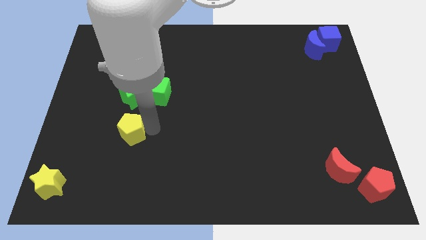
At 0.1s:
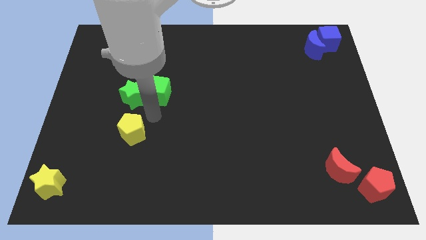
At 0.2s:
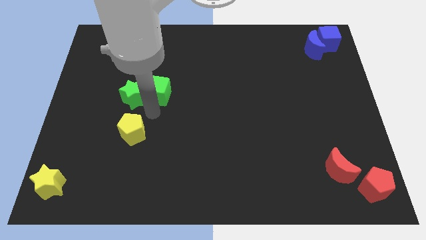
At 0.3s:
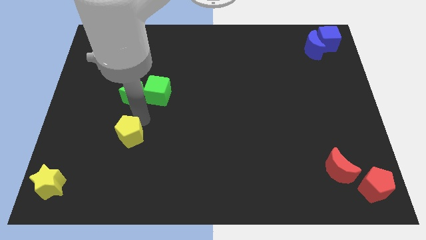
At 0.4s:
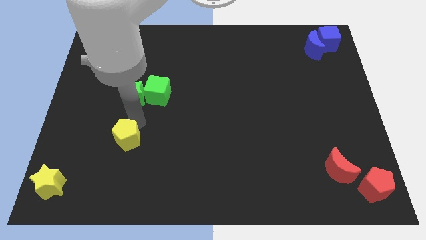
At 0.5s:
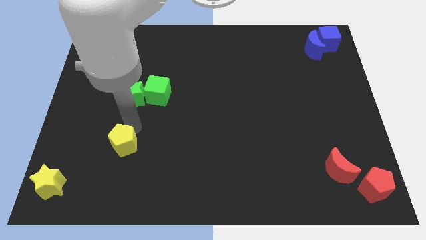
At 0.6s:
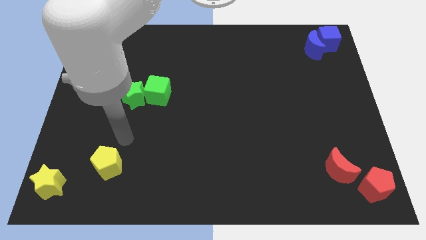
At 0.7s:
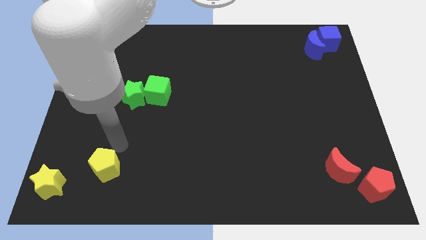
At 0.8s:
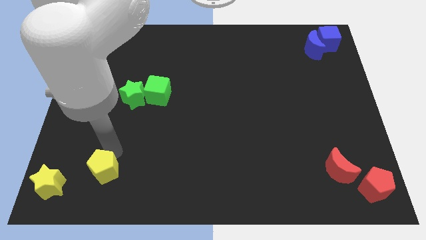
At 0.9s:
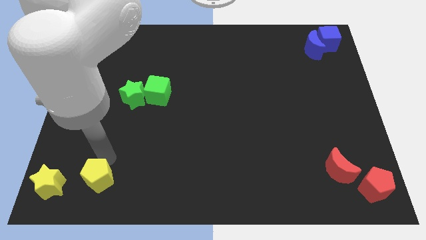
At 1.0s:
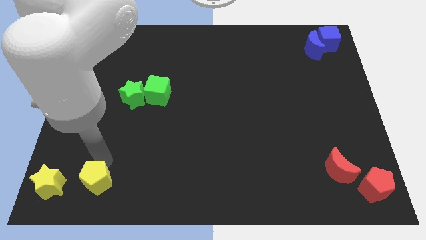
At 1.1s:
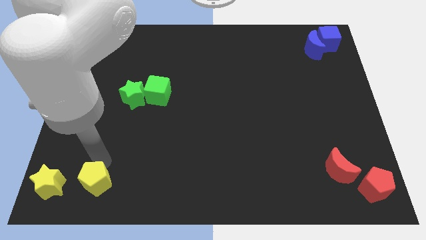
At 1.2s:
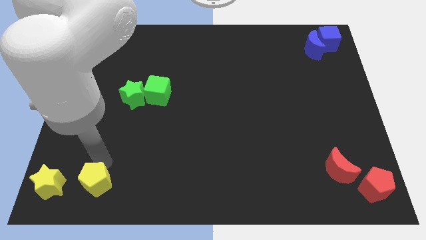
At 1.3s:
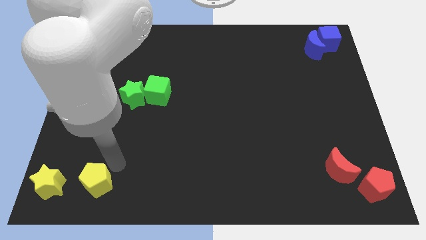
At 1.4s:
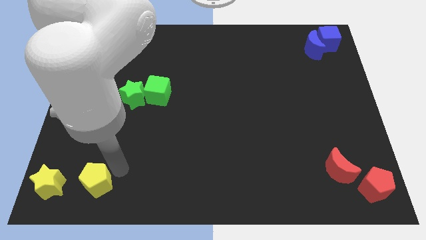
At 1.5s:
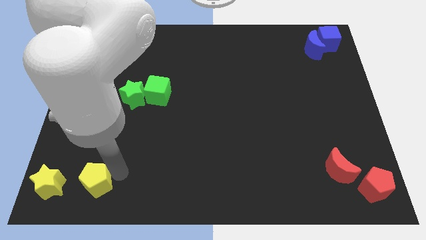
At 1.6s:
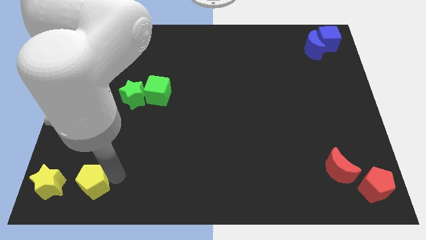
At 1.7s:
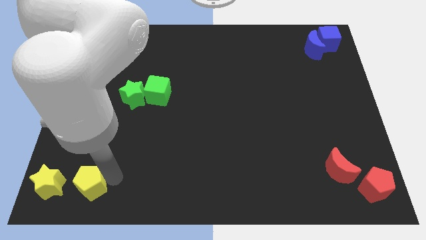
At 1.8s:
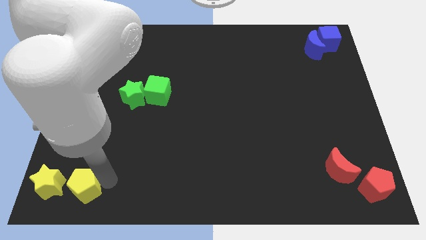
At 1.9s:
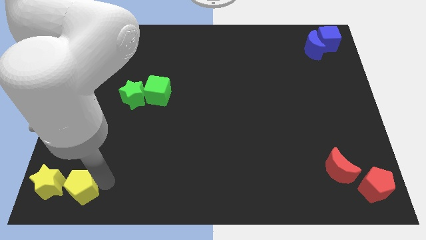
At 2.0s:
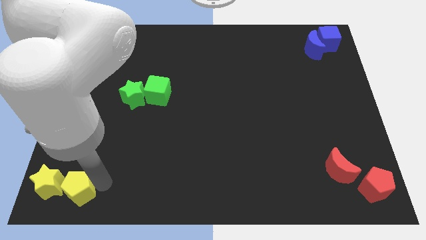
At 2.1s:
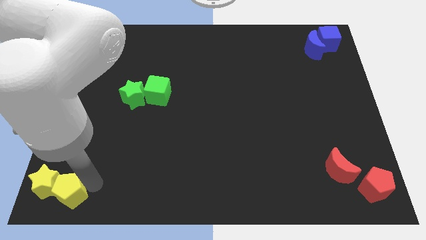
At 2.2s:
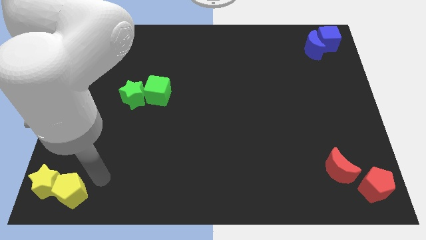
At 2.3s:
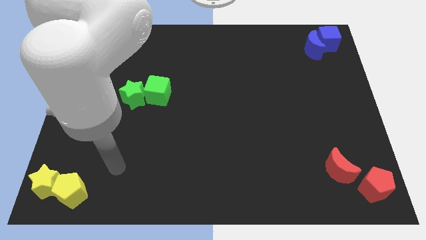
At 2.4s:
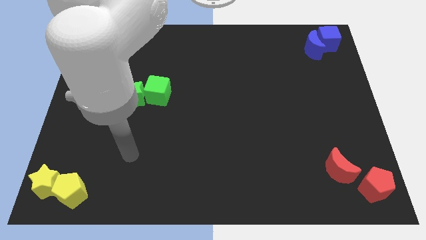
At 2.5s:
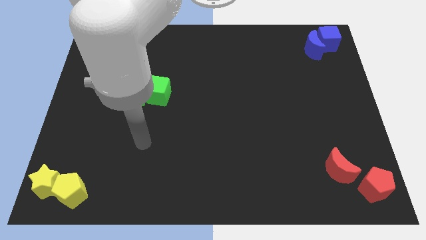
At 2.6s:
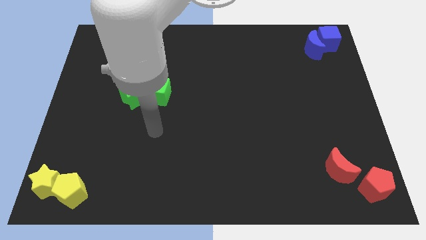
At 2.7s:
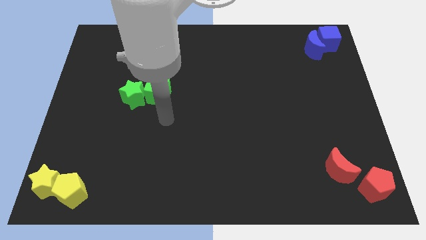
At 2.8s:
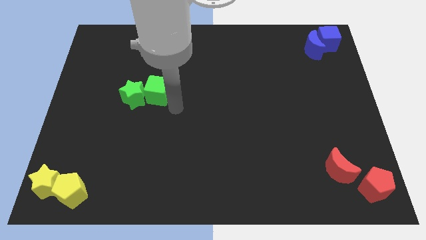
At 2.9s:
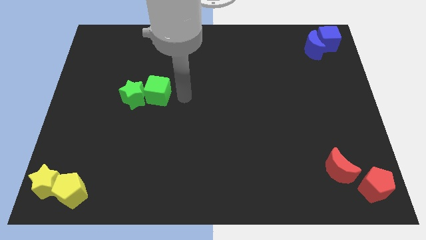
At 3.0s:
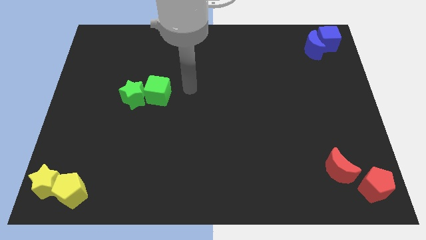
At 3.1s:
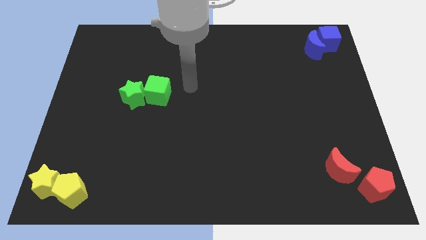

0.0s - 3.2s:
push the yellow pentagon into the yellow star

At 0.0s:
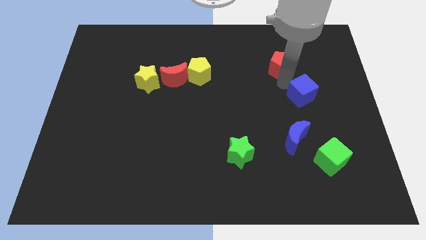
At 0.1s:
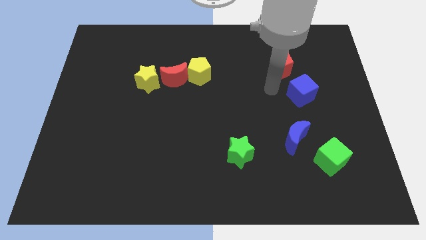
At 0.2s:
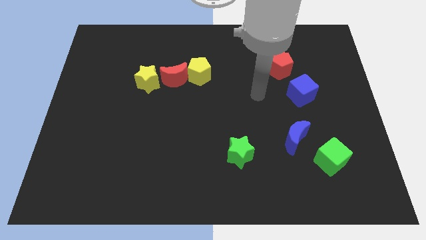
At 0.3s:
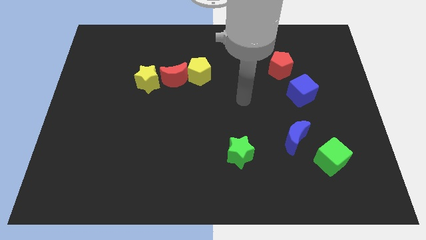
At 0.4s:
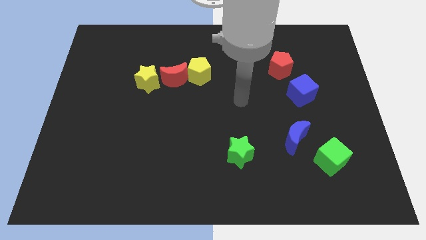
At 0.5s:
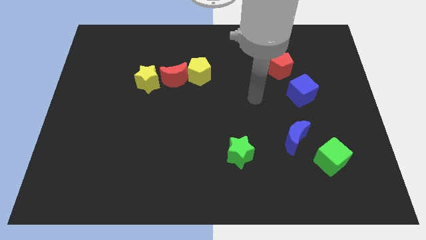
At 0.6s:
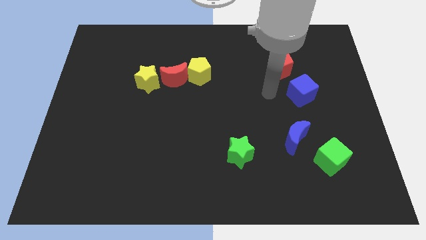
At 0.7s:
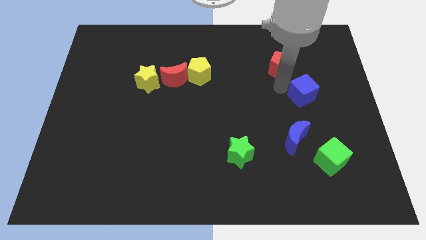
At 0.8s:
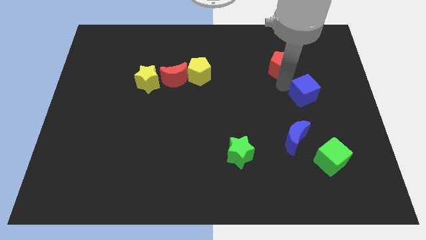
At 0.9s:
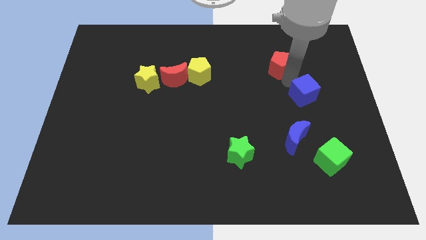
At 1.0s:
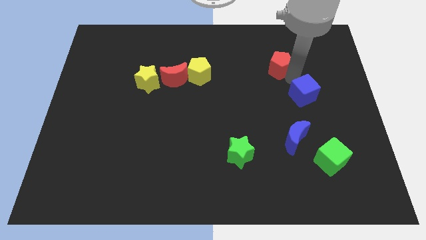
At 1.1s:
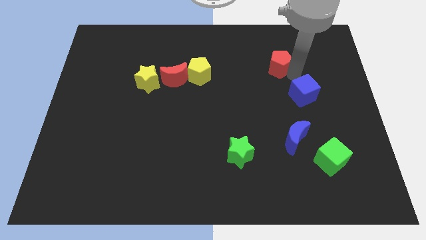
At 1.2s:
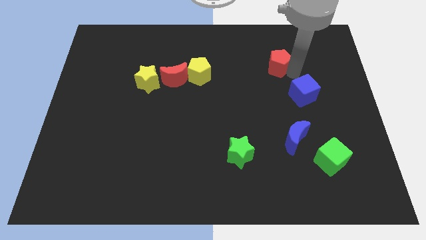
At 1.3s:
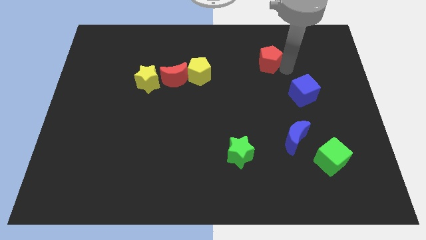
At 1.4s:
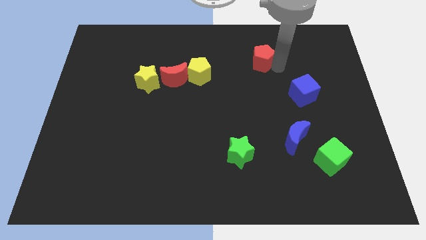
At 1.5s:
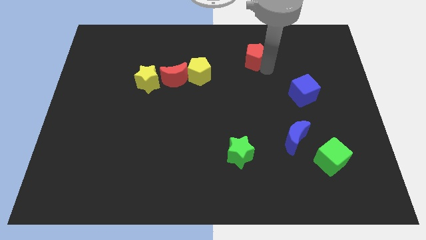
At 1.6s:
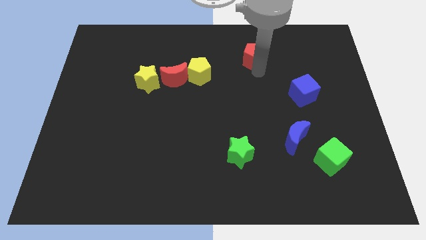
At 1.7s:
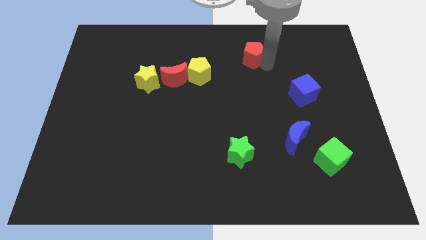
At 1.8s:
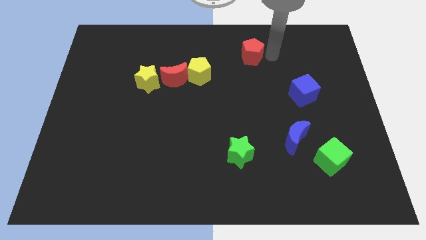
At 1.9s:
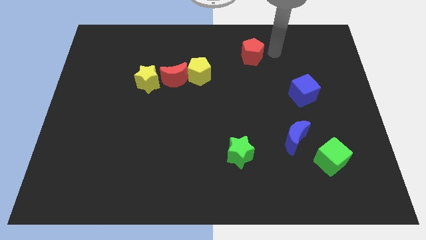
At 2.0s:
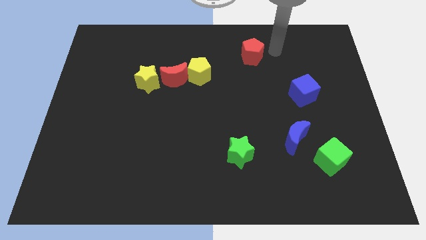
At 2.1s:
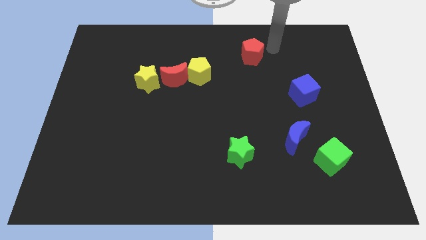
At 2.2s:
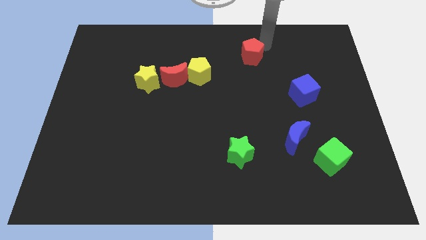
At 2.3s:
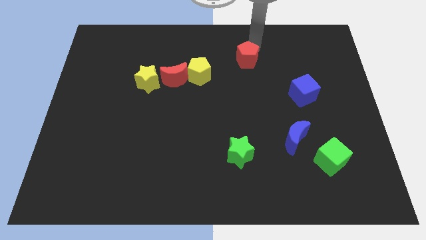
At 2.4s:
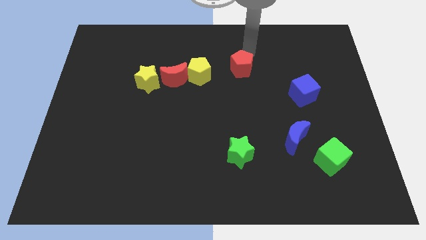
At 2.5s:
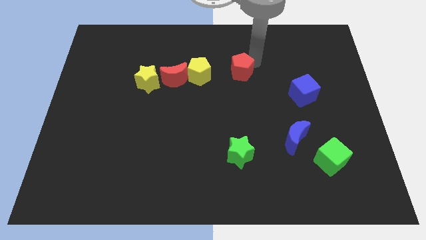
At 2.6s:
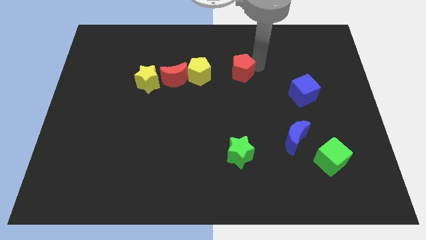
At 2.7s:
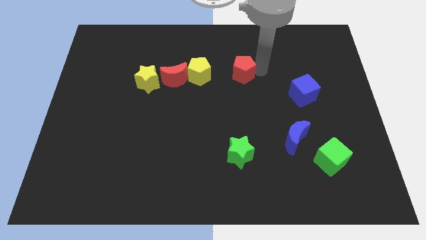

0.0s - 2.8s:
push the red pentagon to the right of the yellow pentagon

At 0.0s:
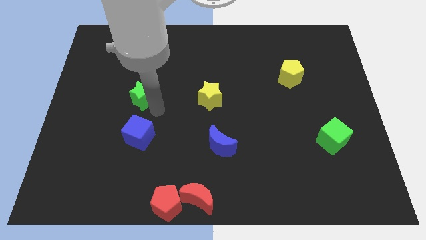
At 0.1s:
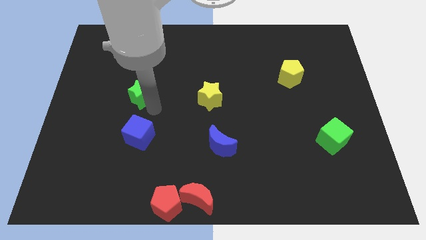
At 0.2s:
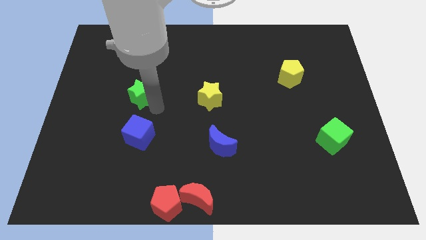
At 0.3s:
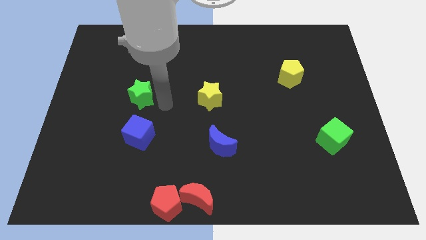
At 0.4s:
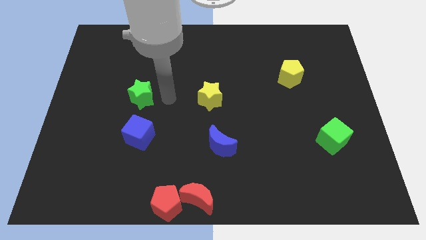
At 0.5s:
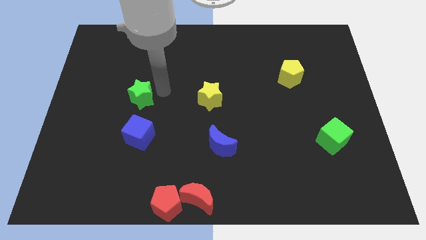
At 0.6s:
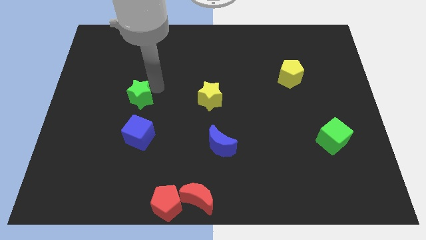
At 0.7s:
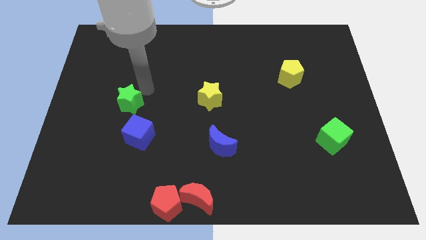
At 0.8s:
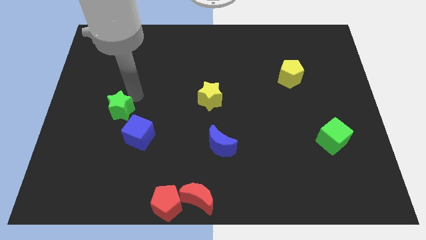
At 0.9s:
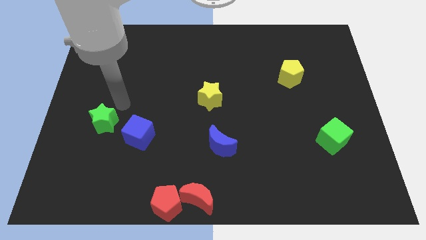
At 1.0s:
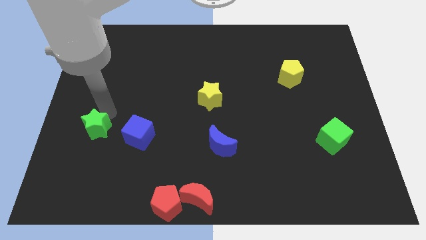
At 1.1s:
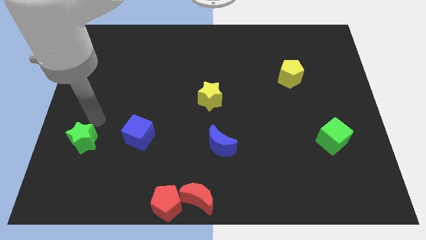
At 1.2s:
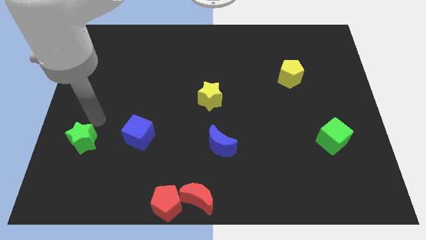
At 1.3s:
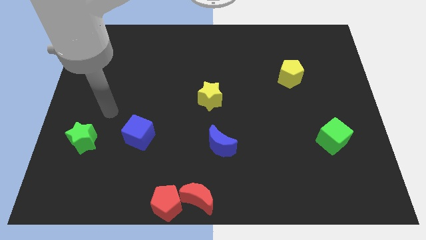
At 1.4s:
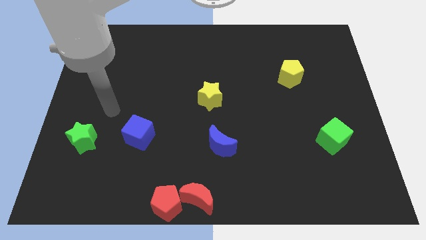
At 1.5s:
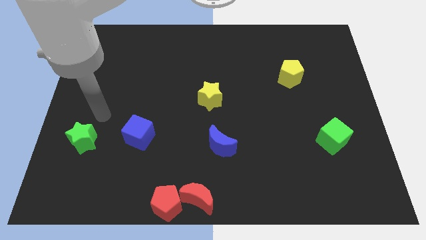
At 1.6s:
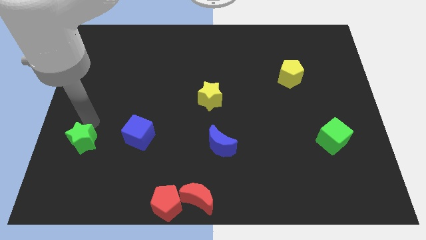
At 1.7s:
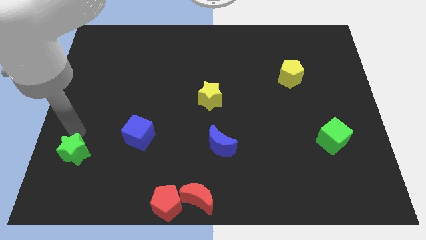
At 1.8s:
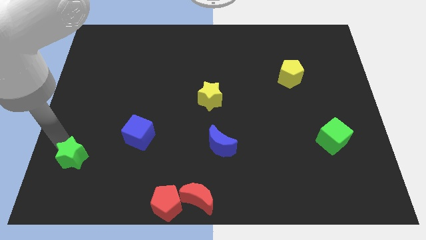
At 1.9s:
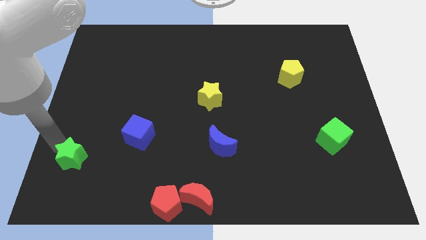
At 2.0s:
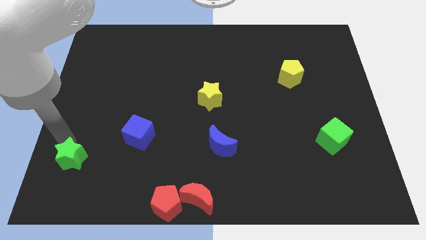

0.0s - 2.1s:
move the green star parallel to the left of the blue cube

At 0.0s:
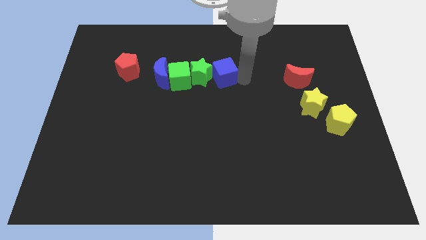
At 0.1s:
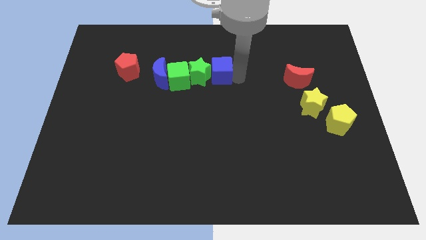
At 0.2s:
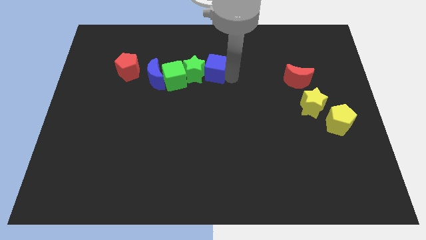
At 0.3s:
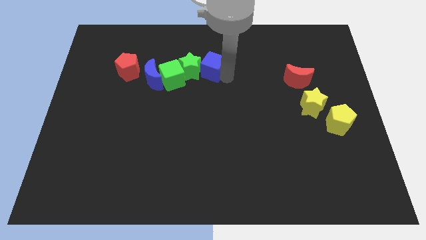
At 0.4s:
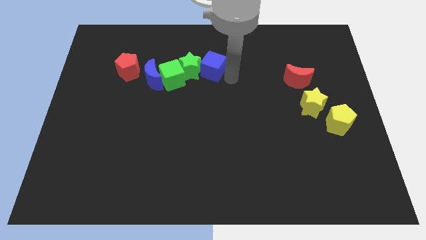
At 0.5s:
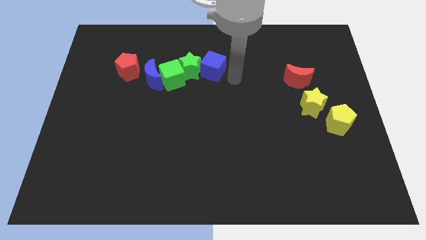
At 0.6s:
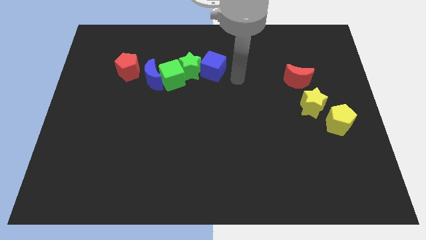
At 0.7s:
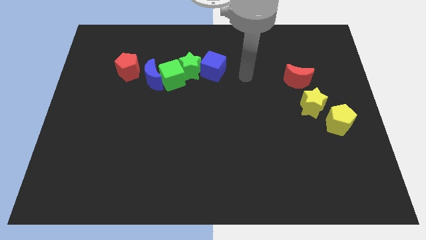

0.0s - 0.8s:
slightly push group of blocks to the left

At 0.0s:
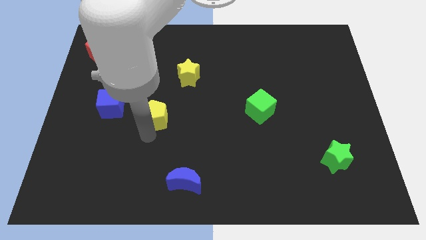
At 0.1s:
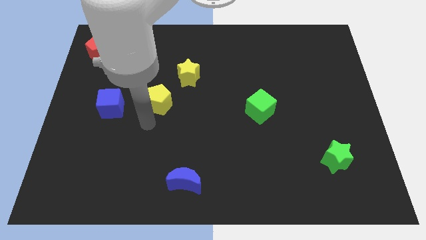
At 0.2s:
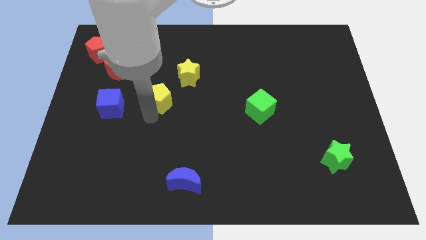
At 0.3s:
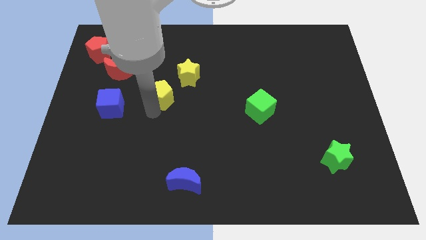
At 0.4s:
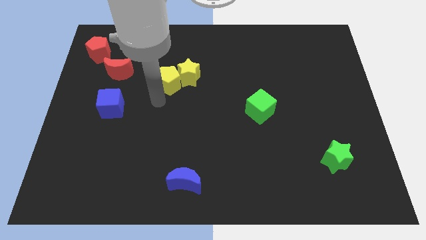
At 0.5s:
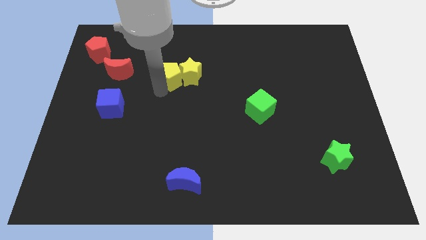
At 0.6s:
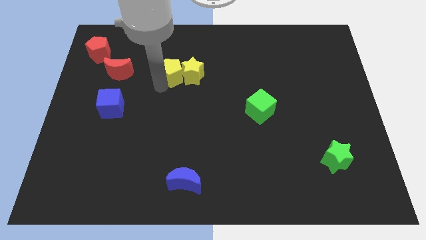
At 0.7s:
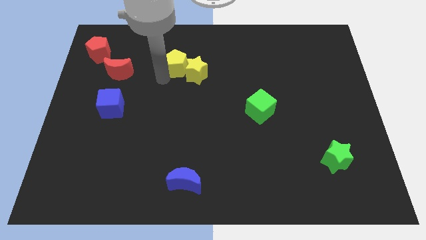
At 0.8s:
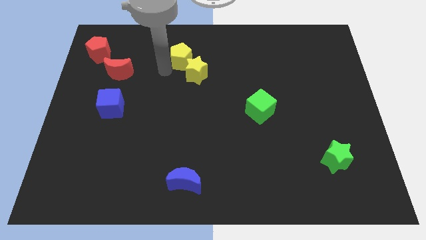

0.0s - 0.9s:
push yellow pentagon left to yellow star
